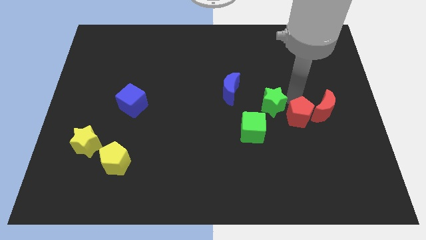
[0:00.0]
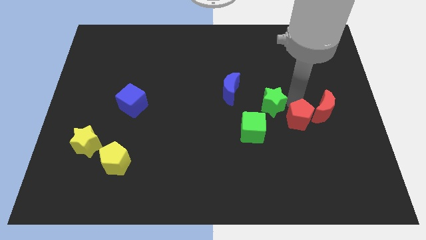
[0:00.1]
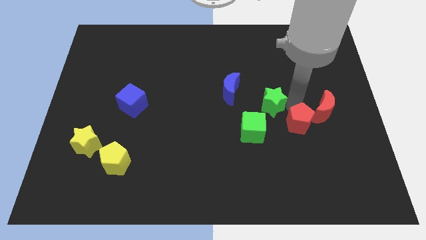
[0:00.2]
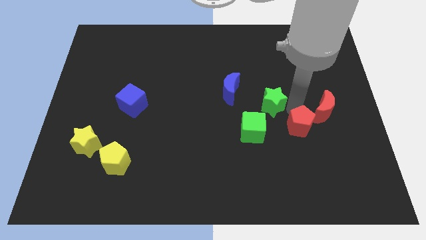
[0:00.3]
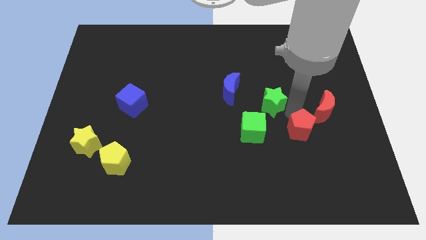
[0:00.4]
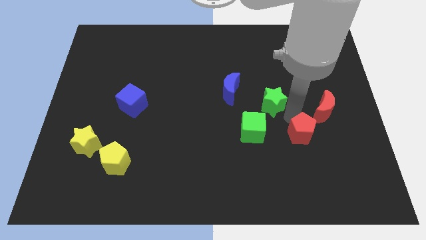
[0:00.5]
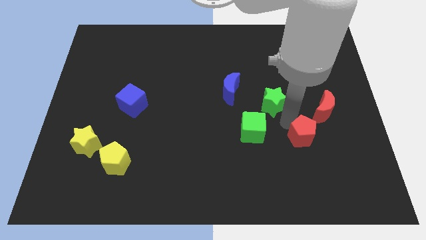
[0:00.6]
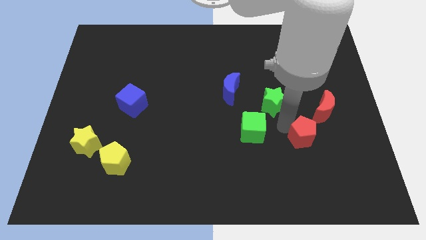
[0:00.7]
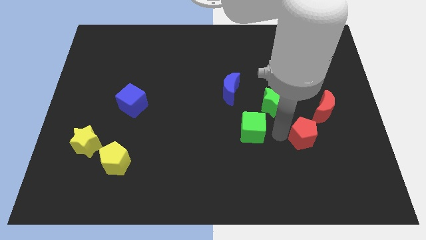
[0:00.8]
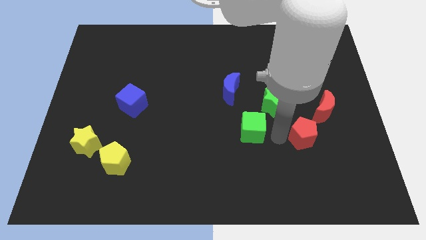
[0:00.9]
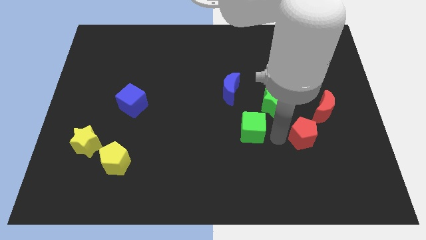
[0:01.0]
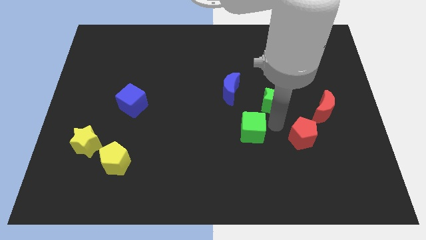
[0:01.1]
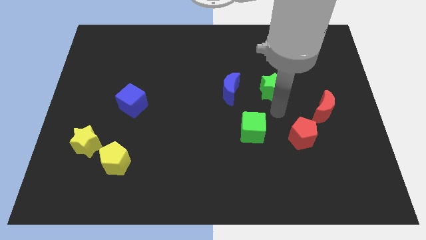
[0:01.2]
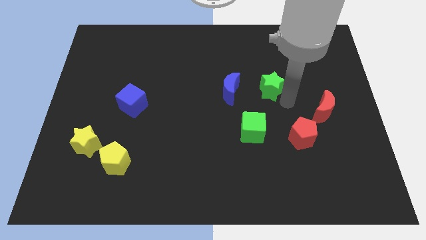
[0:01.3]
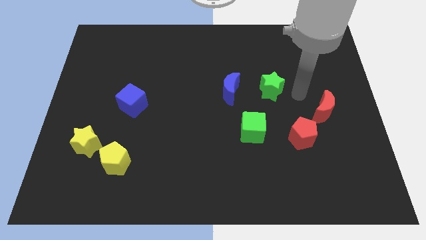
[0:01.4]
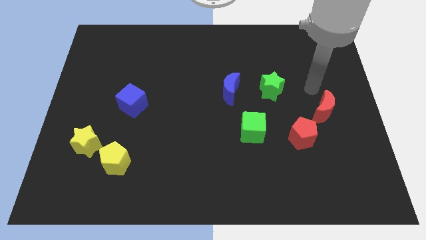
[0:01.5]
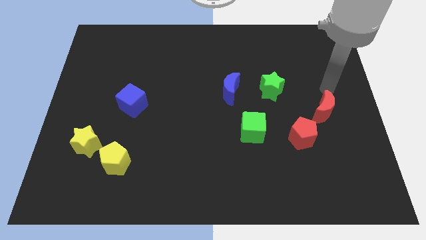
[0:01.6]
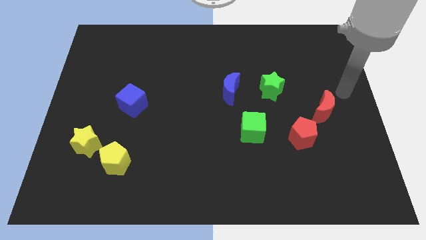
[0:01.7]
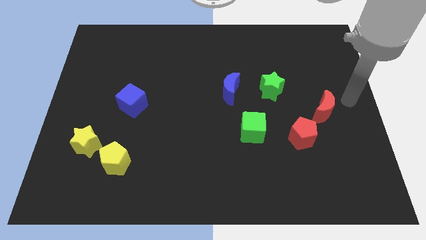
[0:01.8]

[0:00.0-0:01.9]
move red pentagon to the right of green cube

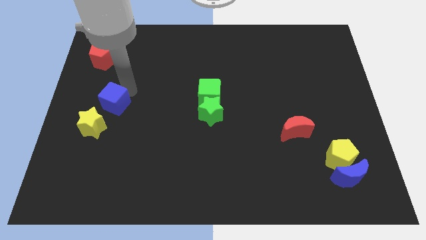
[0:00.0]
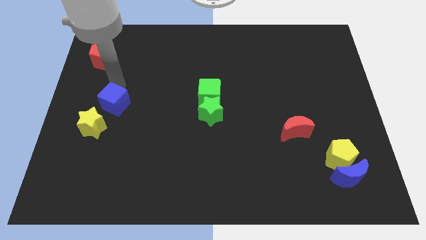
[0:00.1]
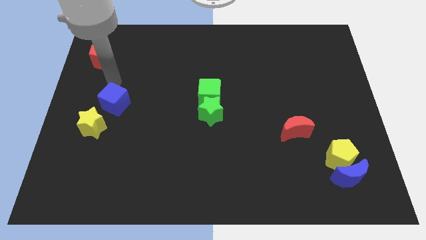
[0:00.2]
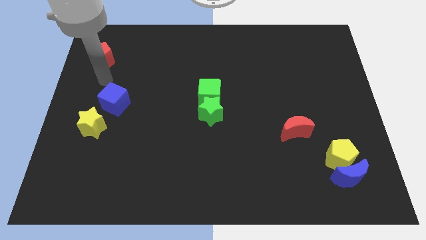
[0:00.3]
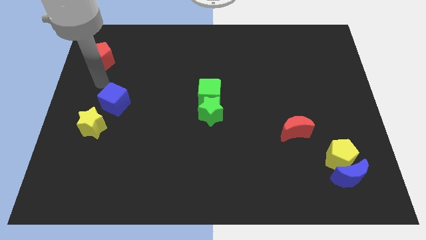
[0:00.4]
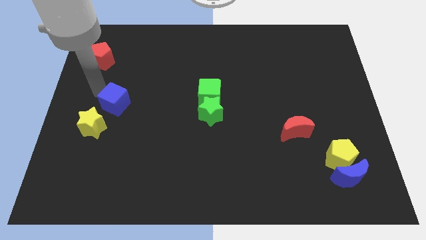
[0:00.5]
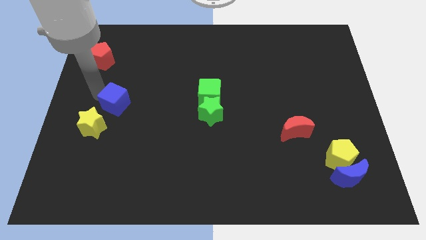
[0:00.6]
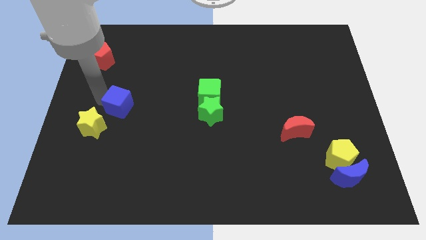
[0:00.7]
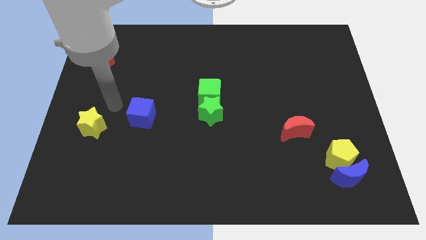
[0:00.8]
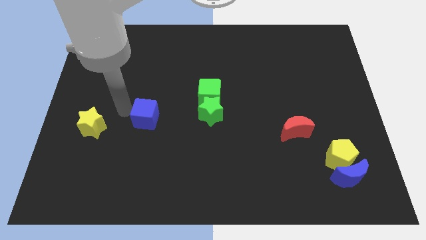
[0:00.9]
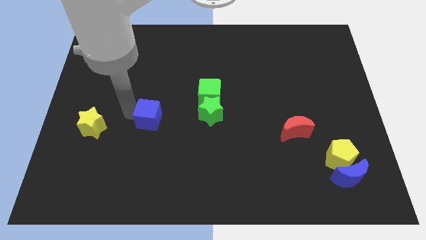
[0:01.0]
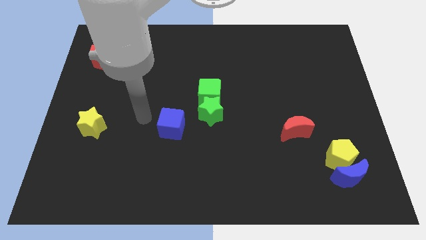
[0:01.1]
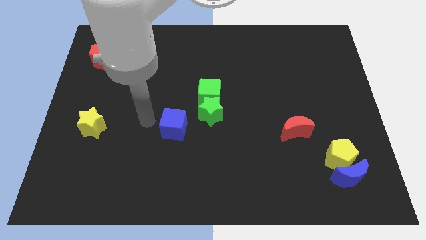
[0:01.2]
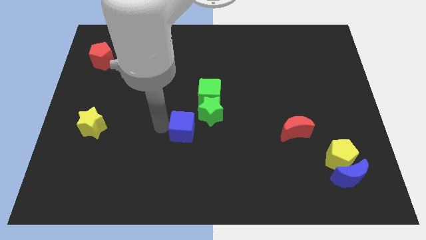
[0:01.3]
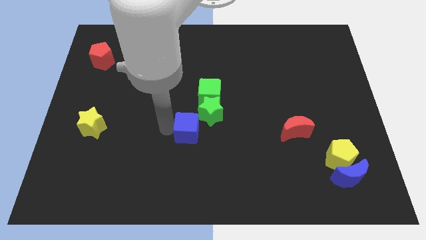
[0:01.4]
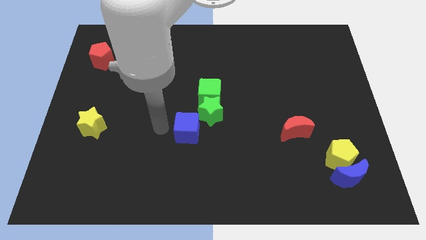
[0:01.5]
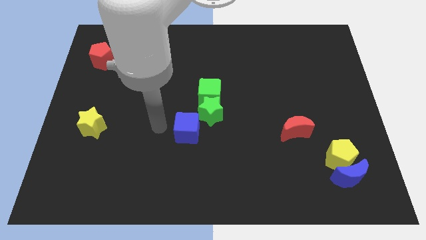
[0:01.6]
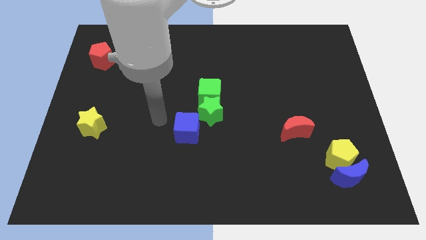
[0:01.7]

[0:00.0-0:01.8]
push the blue cube diagonally close to the bottom left of the green star

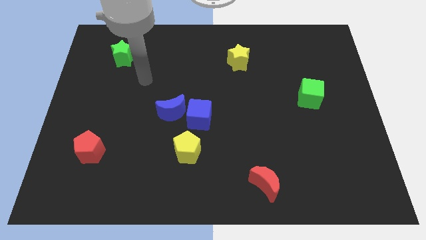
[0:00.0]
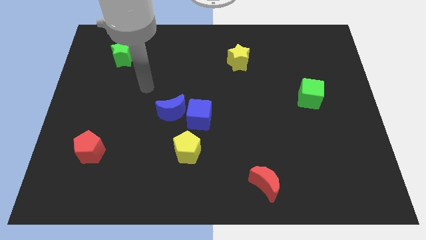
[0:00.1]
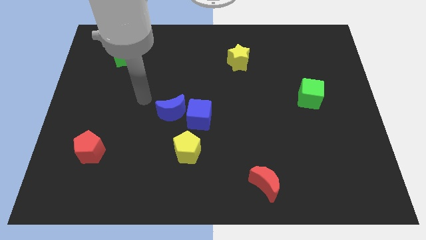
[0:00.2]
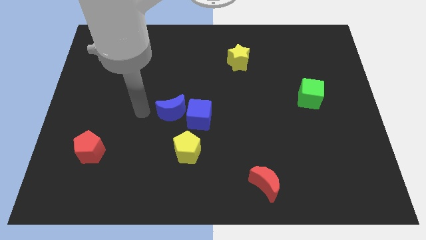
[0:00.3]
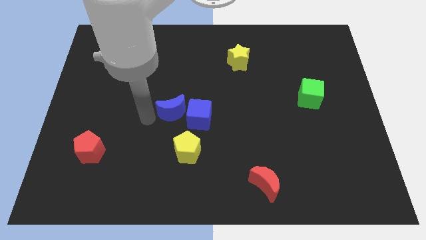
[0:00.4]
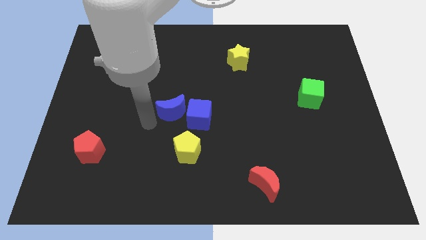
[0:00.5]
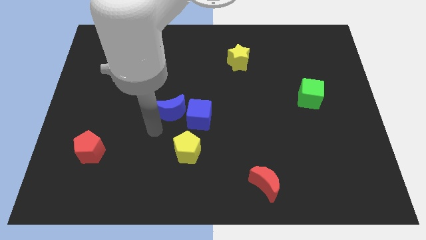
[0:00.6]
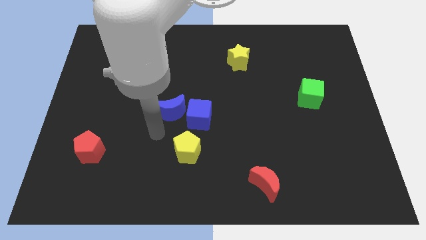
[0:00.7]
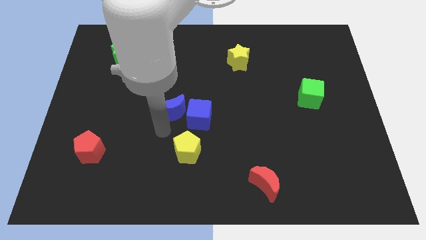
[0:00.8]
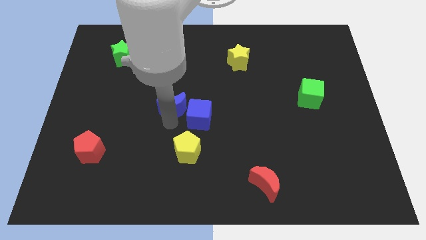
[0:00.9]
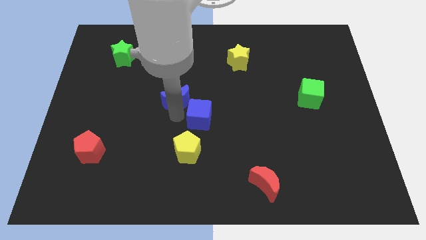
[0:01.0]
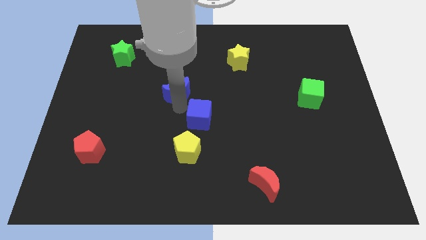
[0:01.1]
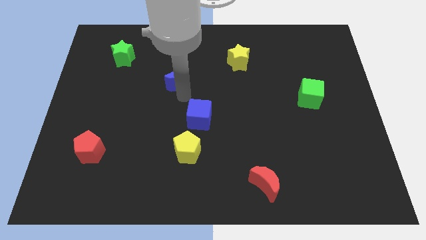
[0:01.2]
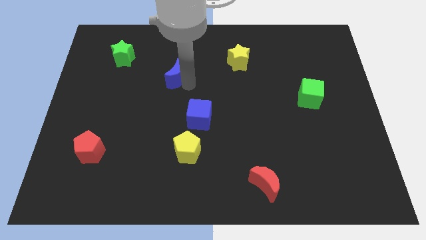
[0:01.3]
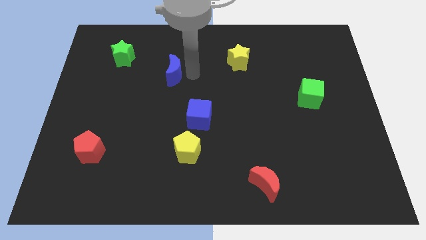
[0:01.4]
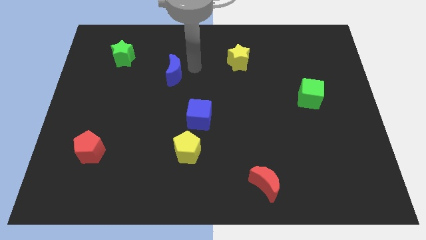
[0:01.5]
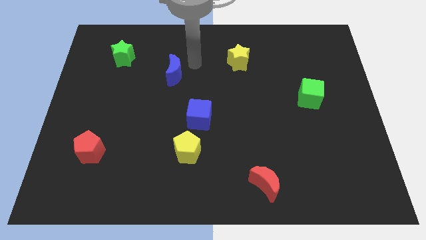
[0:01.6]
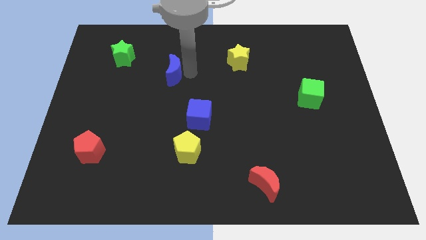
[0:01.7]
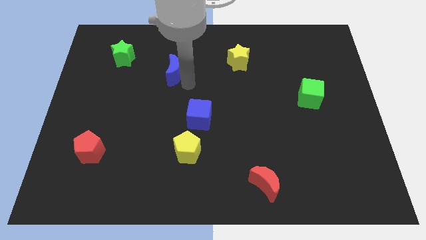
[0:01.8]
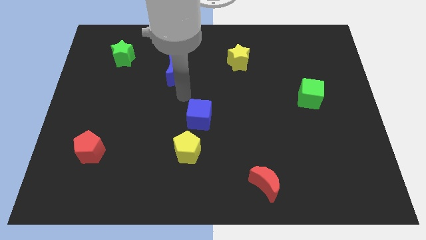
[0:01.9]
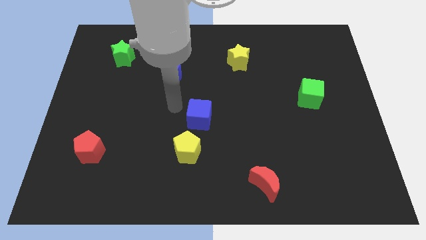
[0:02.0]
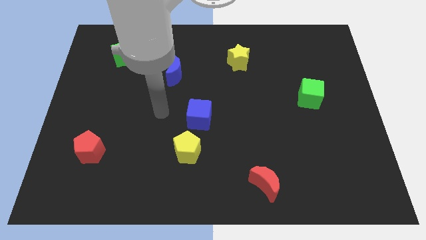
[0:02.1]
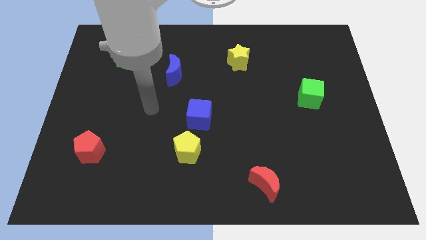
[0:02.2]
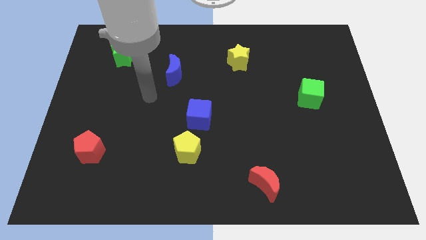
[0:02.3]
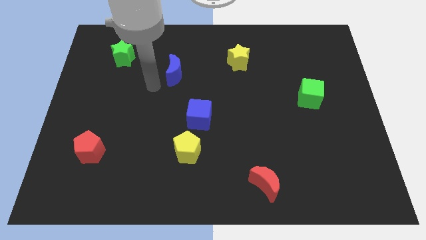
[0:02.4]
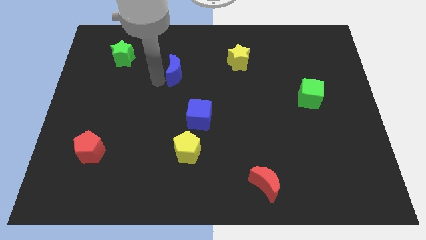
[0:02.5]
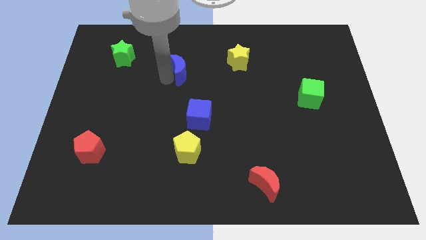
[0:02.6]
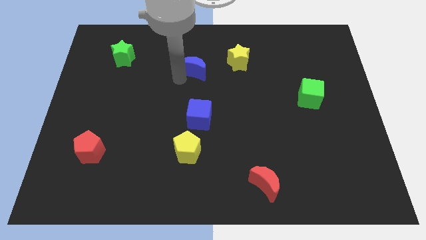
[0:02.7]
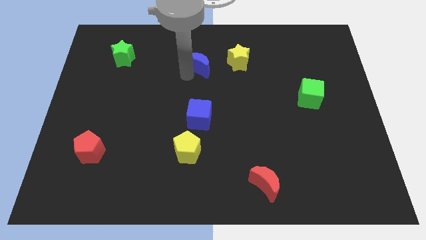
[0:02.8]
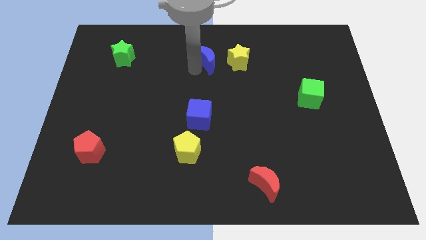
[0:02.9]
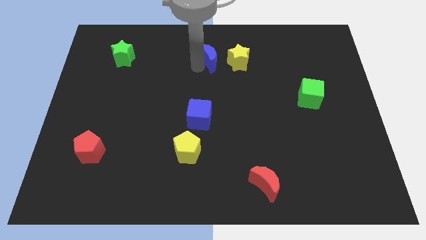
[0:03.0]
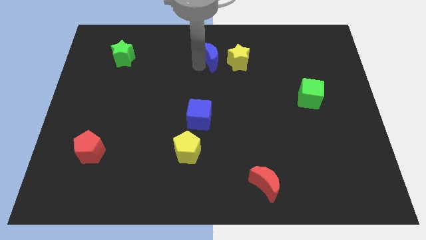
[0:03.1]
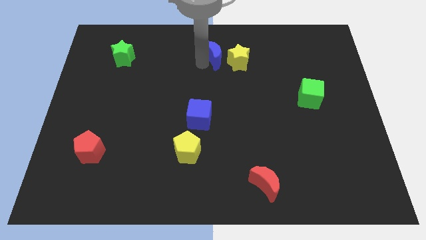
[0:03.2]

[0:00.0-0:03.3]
move the blue moon close to the yellow star

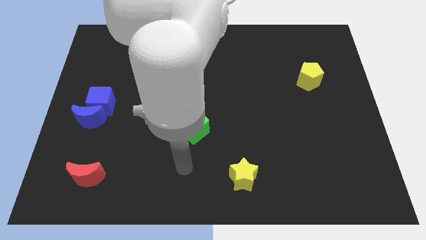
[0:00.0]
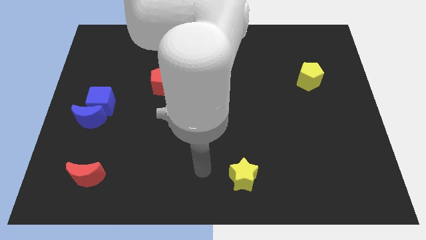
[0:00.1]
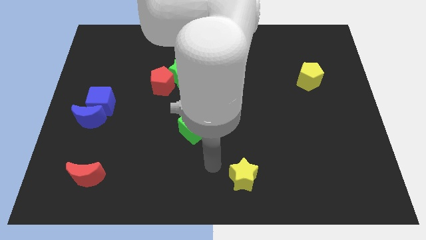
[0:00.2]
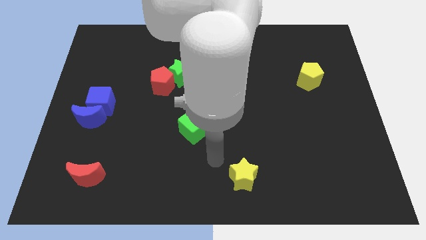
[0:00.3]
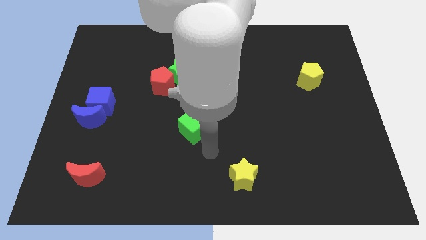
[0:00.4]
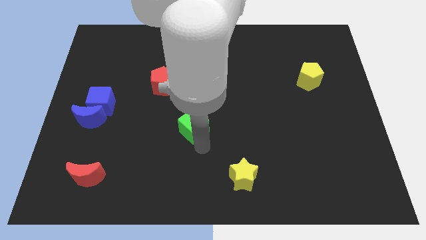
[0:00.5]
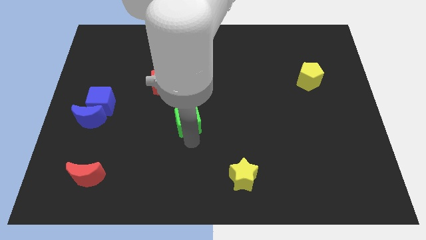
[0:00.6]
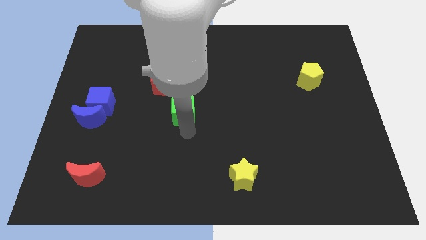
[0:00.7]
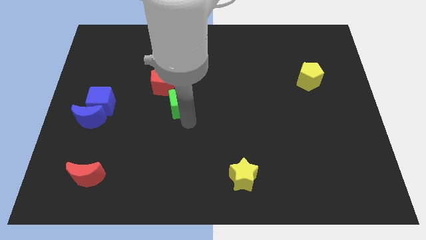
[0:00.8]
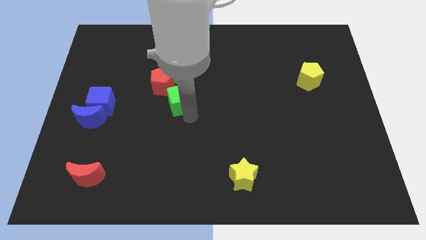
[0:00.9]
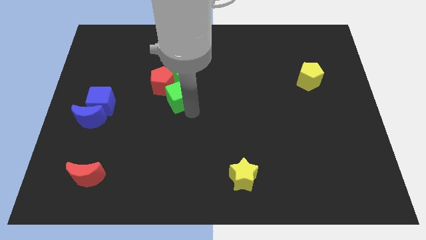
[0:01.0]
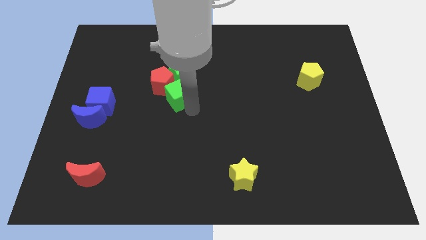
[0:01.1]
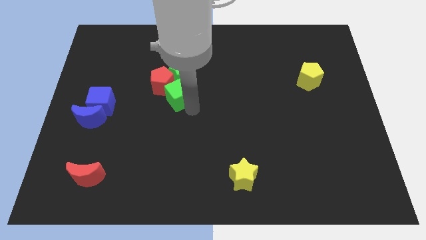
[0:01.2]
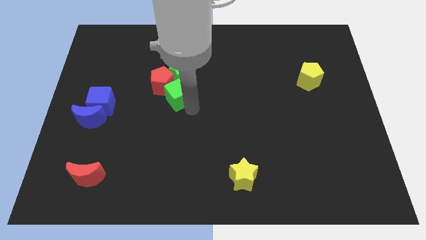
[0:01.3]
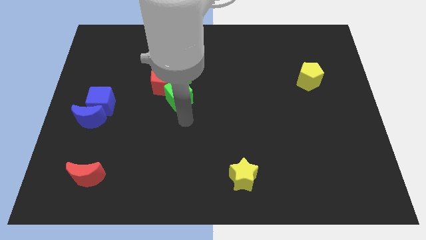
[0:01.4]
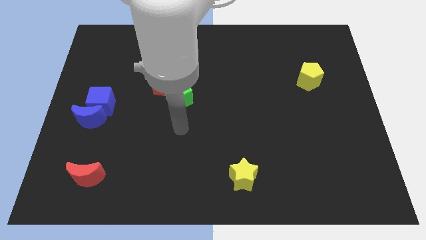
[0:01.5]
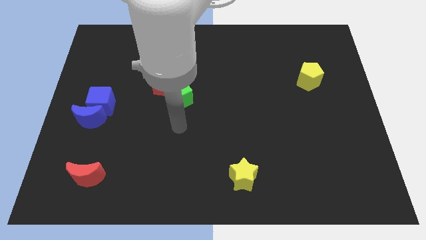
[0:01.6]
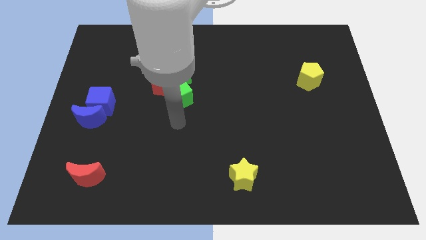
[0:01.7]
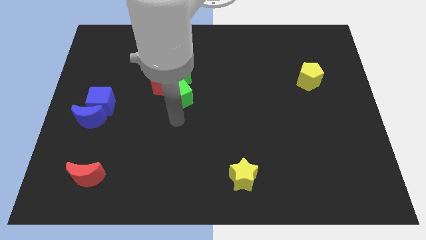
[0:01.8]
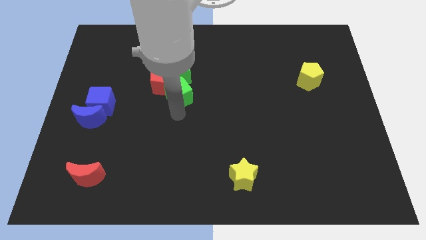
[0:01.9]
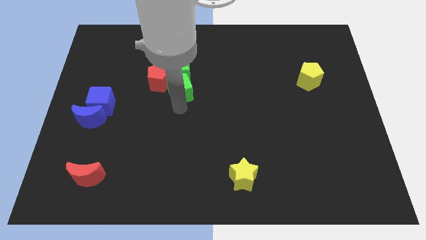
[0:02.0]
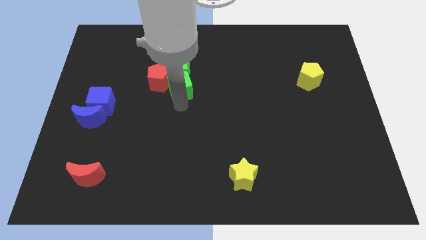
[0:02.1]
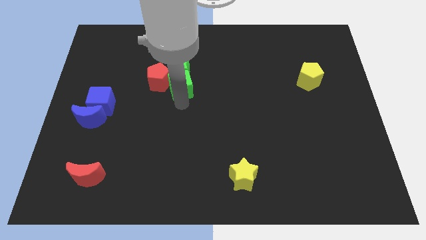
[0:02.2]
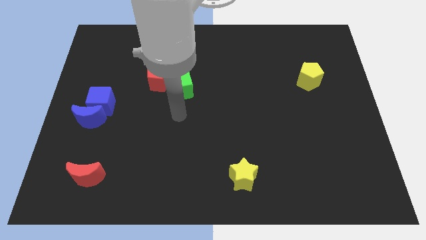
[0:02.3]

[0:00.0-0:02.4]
put green blocks together
